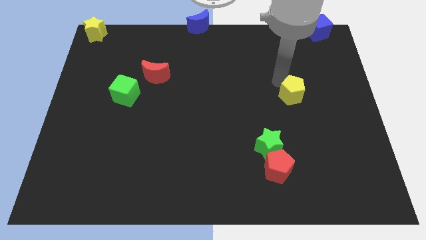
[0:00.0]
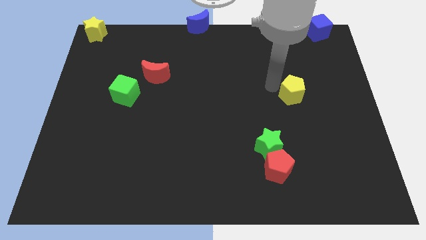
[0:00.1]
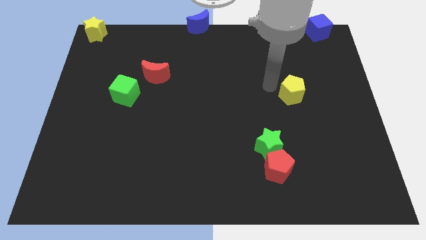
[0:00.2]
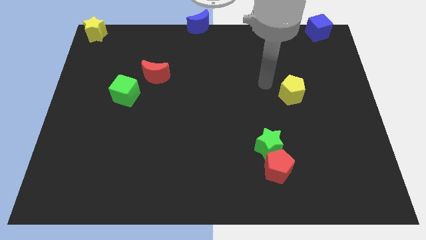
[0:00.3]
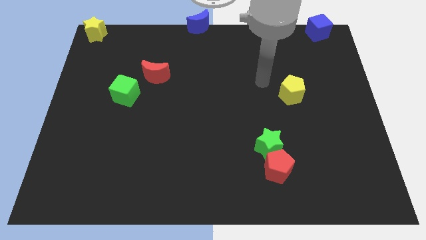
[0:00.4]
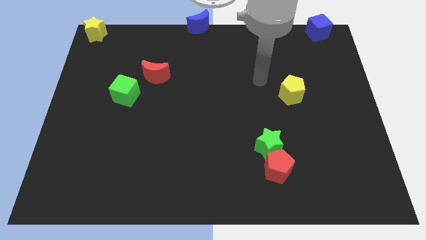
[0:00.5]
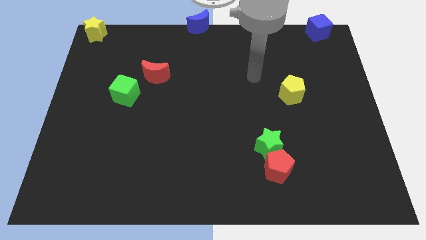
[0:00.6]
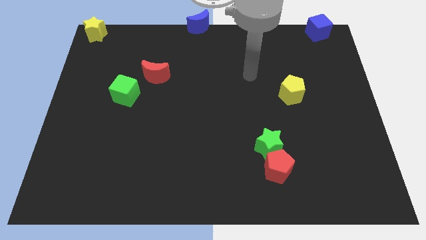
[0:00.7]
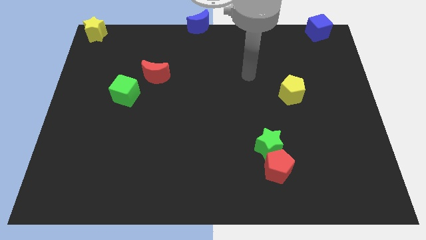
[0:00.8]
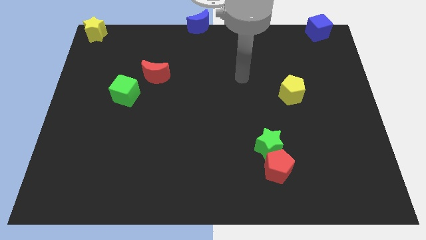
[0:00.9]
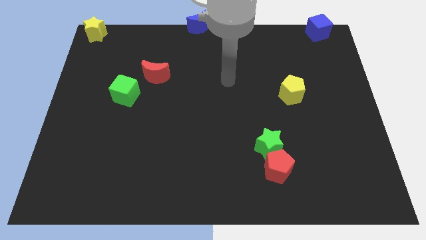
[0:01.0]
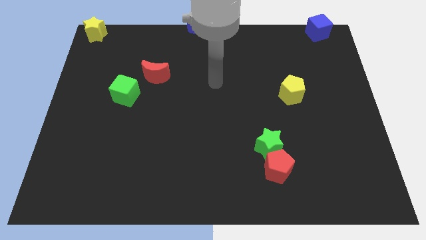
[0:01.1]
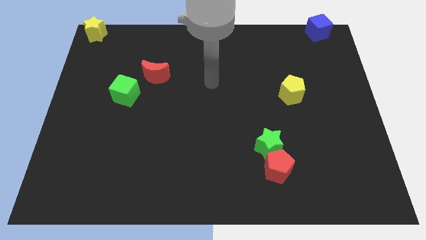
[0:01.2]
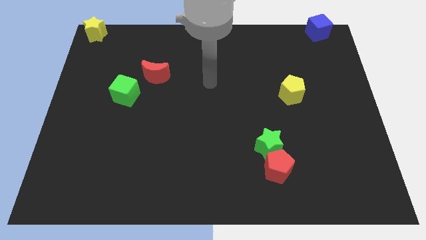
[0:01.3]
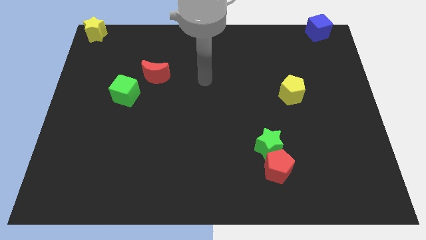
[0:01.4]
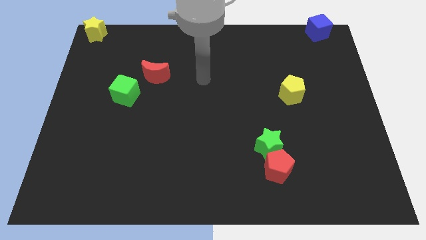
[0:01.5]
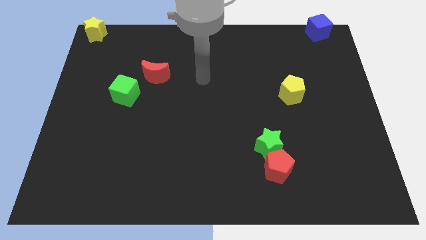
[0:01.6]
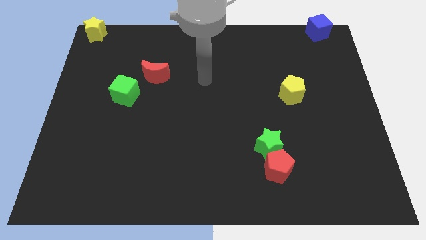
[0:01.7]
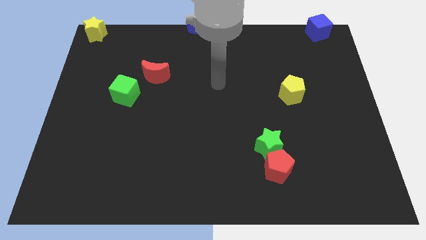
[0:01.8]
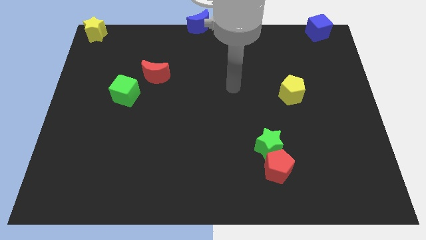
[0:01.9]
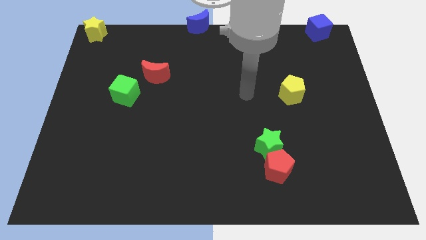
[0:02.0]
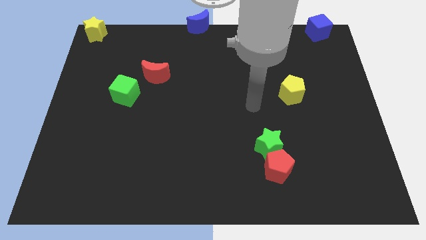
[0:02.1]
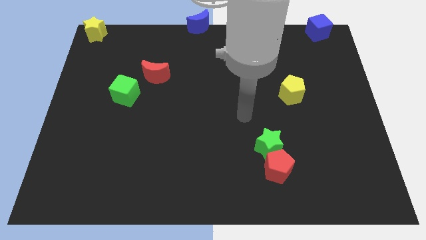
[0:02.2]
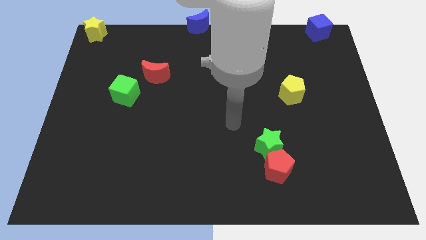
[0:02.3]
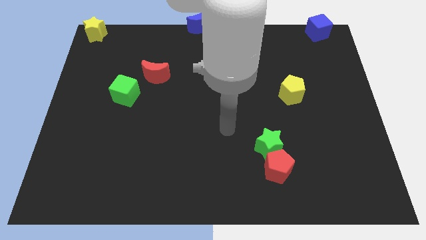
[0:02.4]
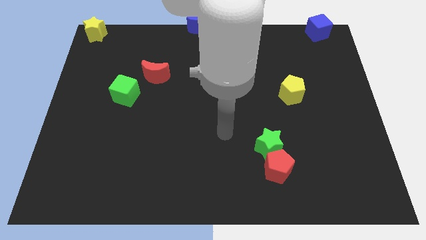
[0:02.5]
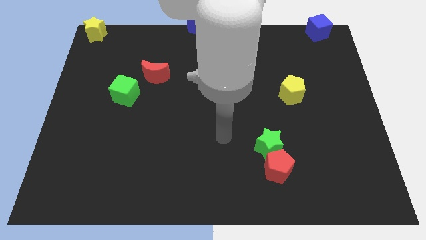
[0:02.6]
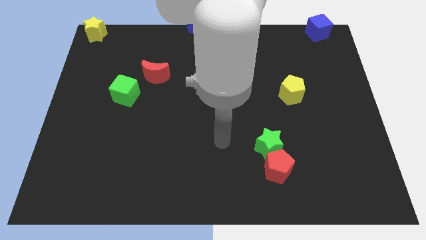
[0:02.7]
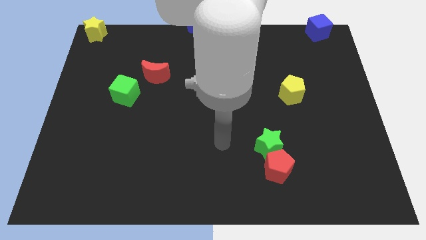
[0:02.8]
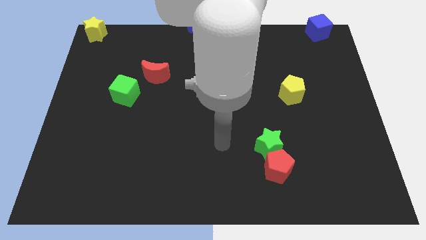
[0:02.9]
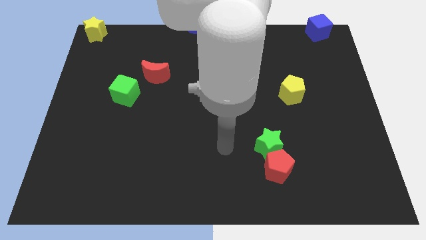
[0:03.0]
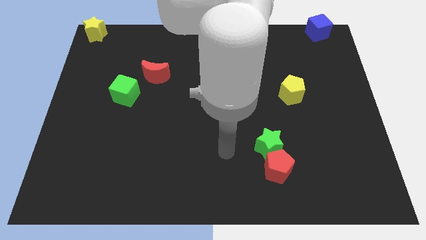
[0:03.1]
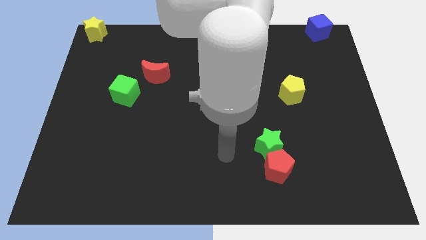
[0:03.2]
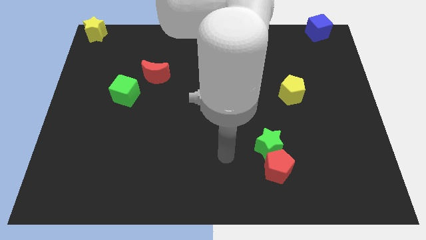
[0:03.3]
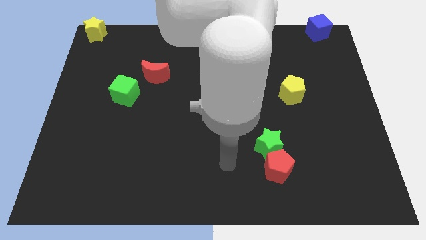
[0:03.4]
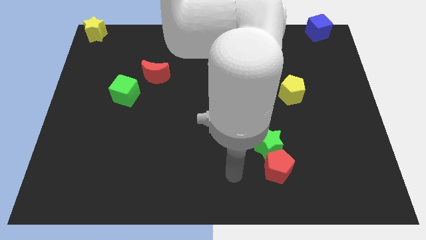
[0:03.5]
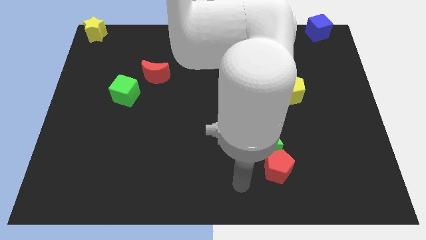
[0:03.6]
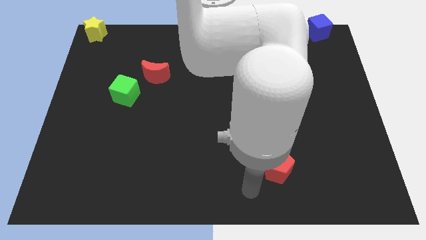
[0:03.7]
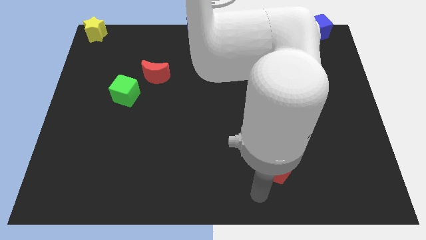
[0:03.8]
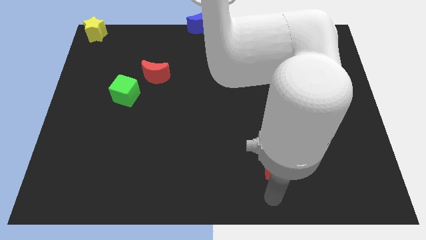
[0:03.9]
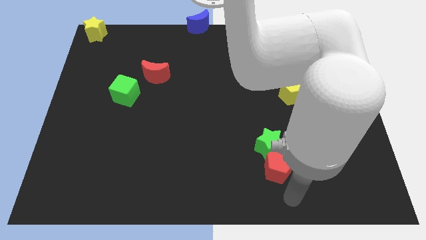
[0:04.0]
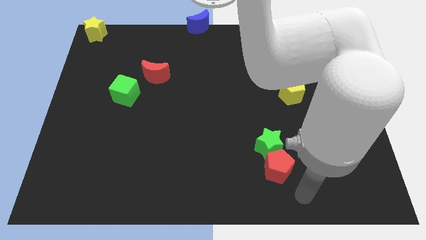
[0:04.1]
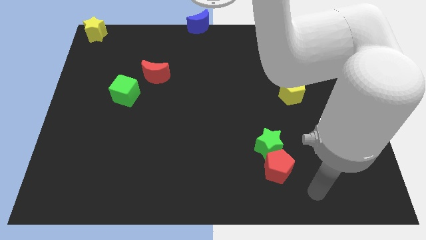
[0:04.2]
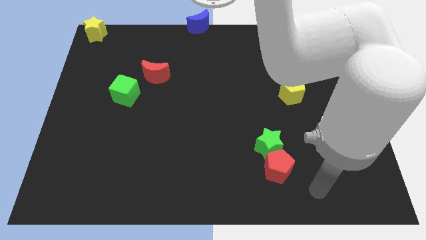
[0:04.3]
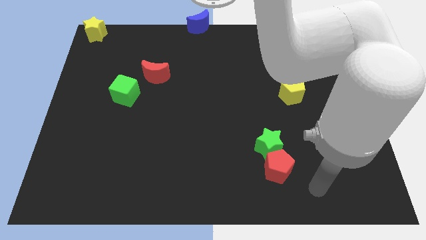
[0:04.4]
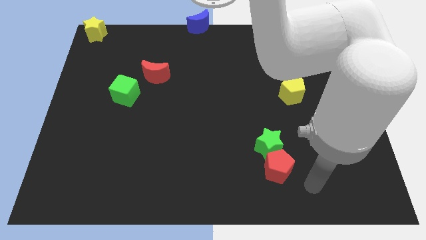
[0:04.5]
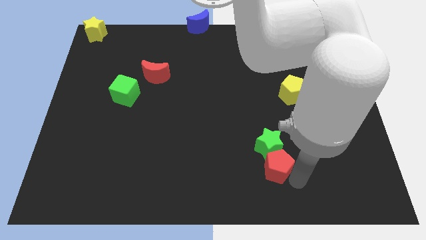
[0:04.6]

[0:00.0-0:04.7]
move your arm away from the yellow pentagon

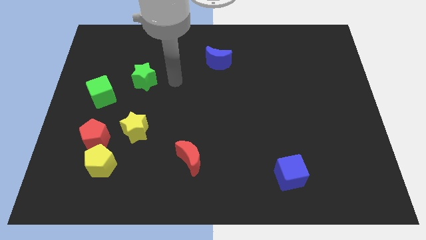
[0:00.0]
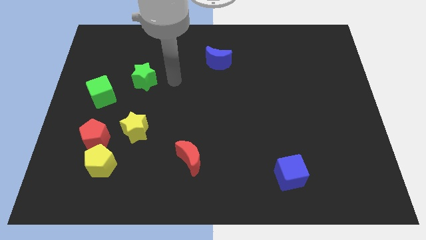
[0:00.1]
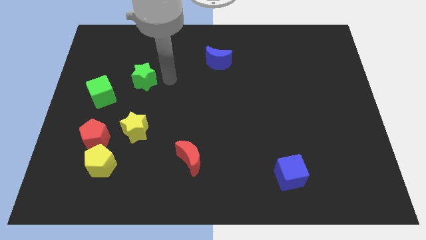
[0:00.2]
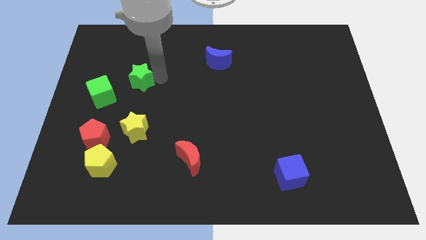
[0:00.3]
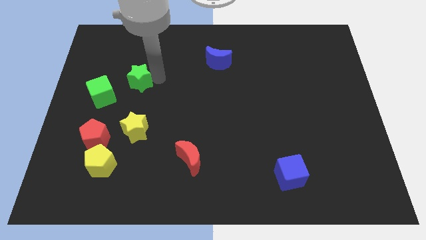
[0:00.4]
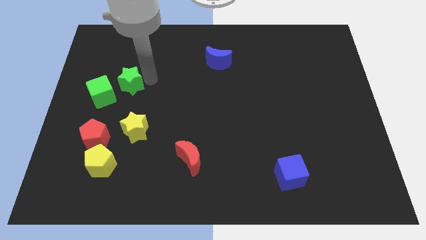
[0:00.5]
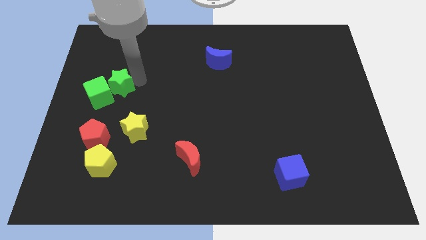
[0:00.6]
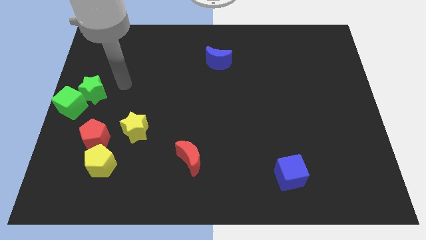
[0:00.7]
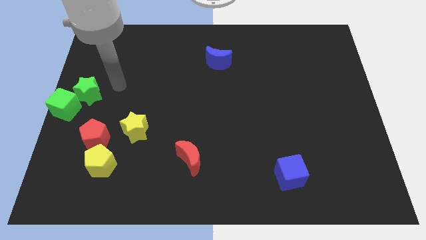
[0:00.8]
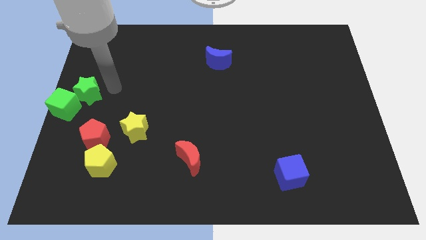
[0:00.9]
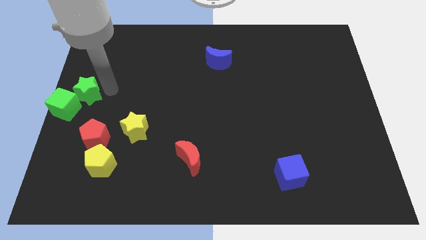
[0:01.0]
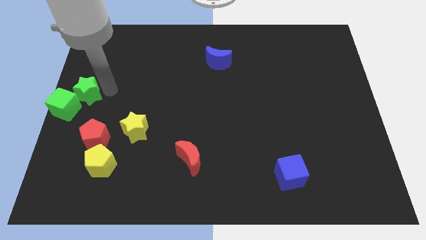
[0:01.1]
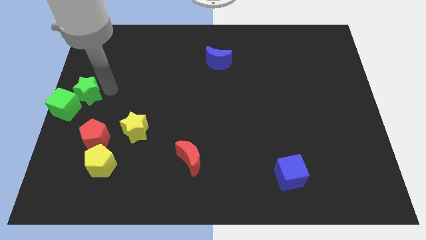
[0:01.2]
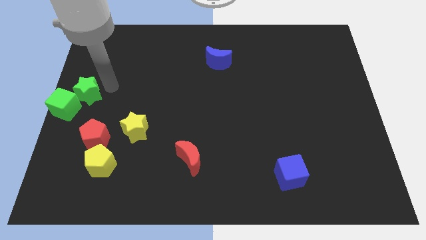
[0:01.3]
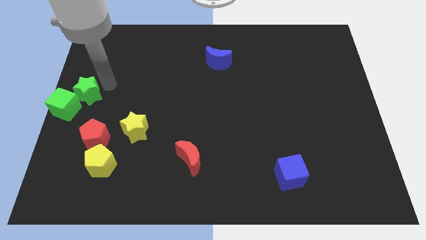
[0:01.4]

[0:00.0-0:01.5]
push the green star into green cube

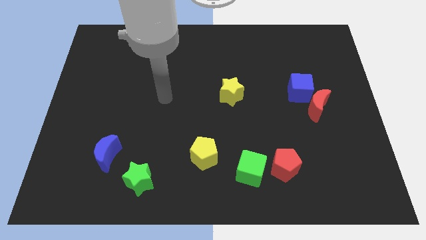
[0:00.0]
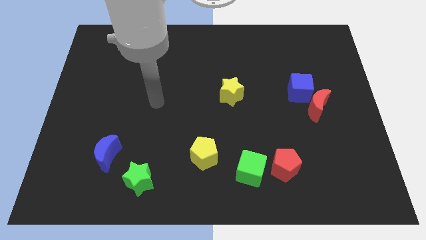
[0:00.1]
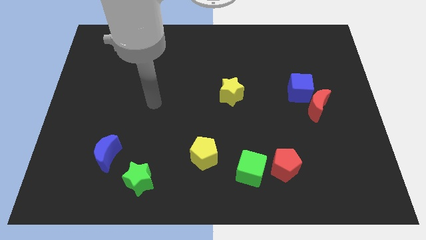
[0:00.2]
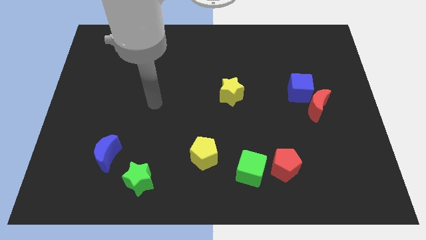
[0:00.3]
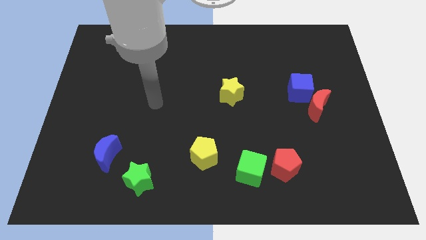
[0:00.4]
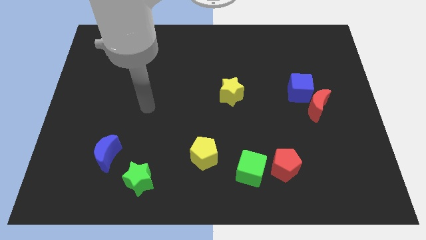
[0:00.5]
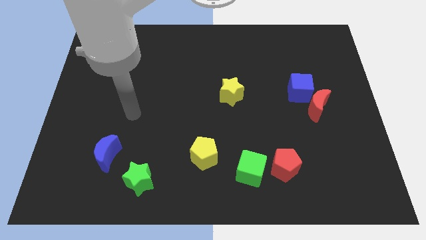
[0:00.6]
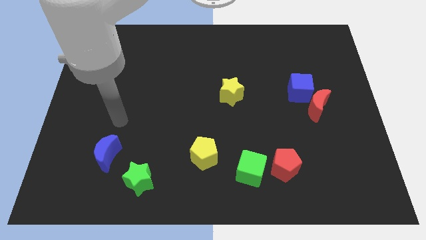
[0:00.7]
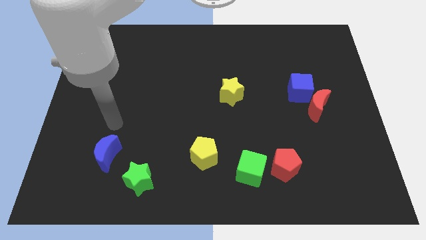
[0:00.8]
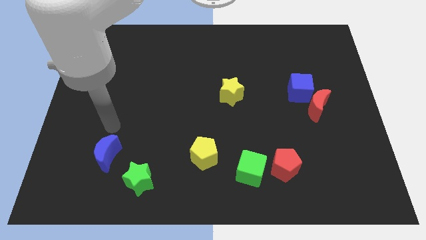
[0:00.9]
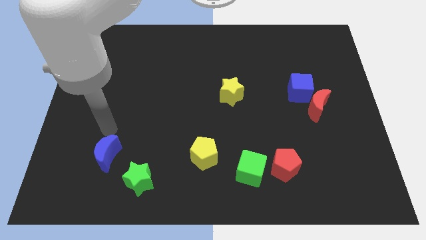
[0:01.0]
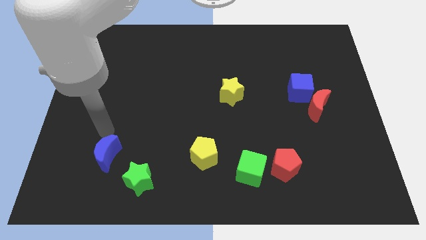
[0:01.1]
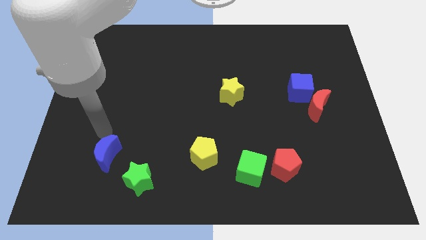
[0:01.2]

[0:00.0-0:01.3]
move close to the blue moon

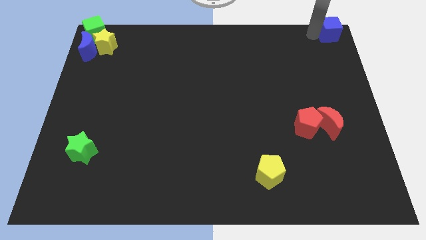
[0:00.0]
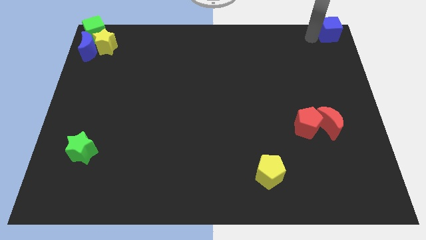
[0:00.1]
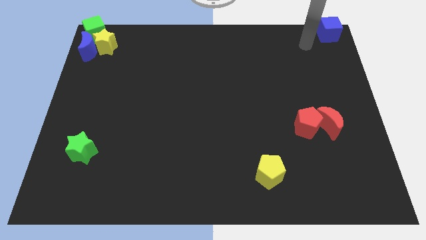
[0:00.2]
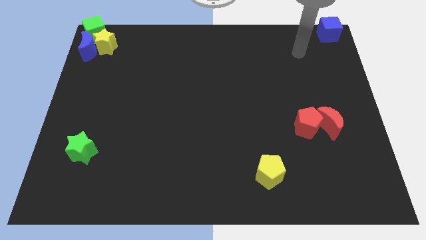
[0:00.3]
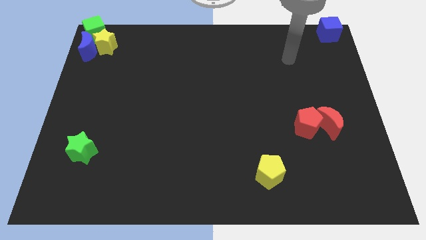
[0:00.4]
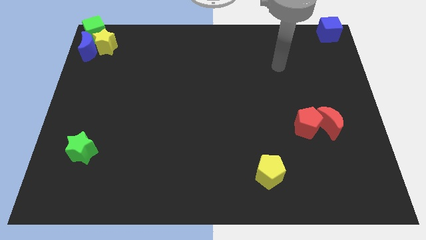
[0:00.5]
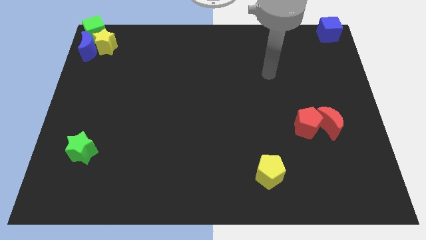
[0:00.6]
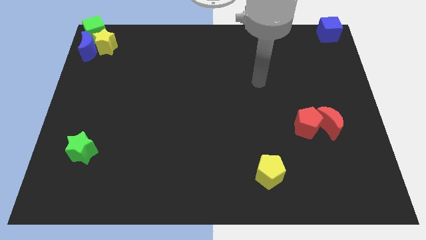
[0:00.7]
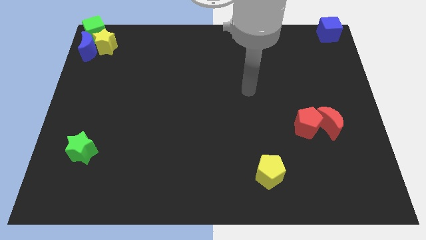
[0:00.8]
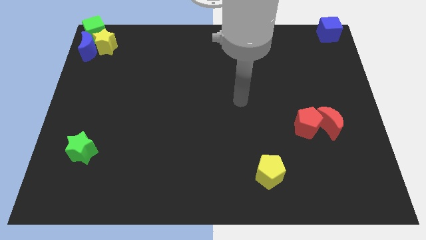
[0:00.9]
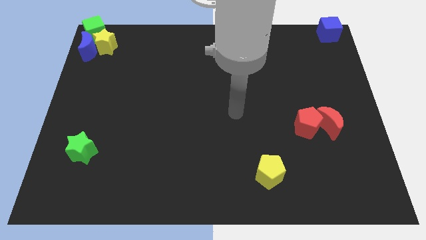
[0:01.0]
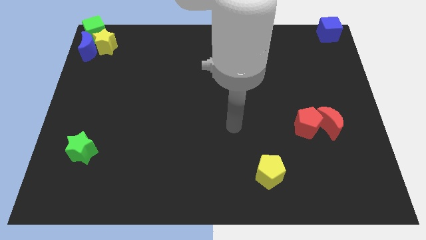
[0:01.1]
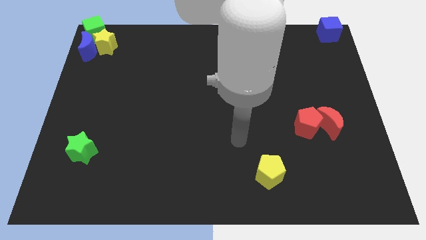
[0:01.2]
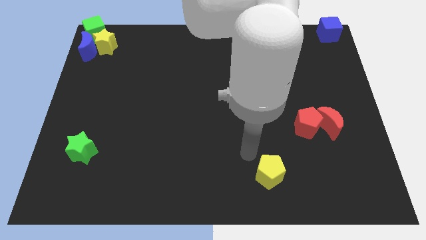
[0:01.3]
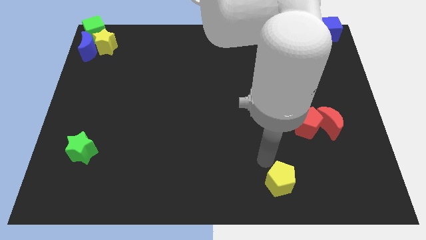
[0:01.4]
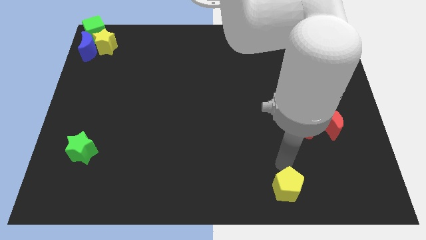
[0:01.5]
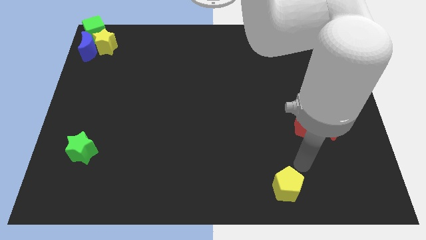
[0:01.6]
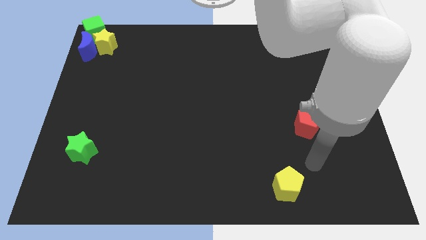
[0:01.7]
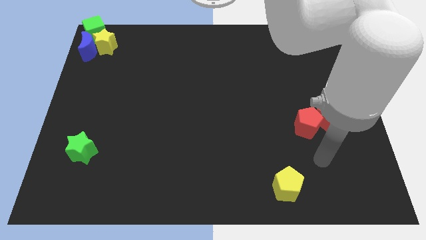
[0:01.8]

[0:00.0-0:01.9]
slightly move the yellow pentagon towards right
